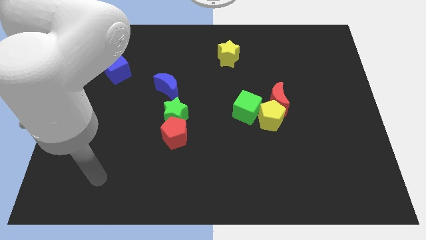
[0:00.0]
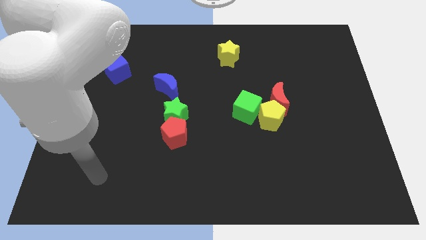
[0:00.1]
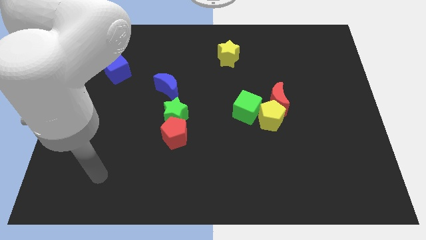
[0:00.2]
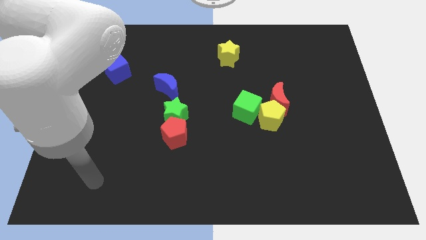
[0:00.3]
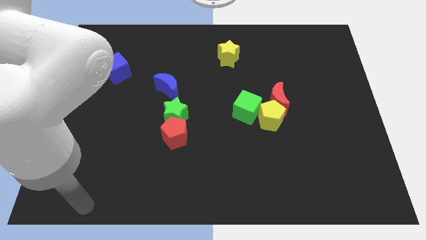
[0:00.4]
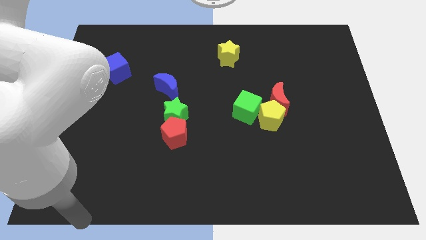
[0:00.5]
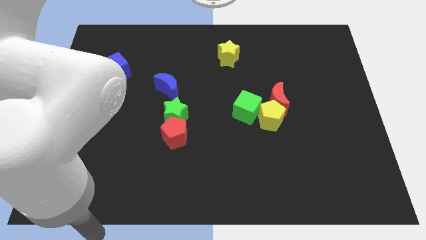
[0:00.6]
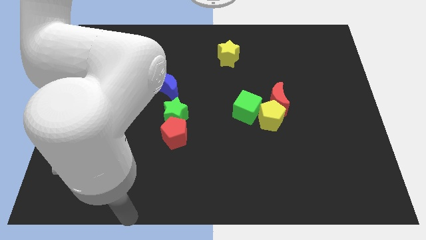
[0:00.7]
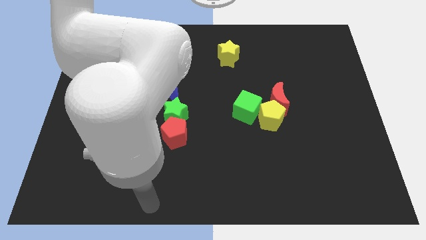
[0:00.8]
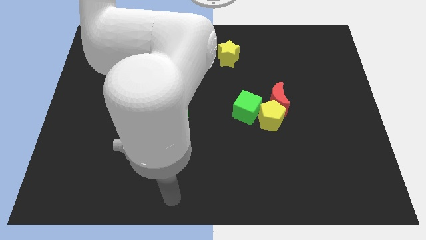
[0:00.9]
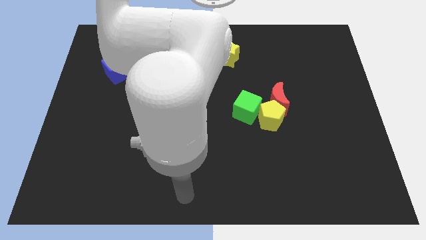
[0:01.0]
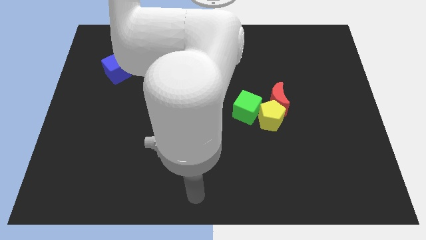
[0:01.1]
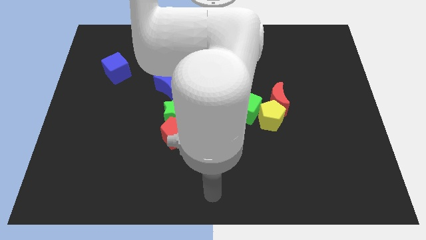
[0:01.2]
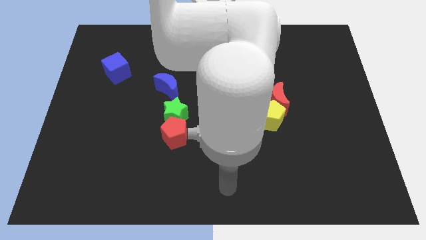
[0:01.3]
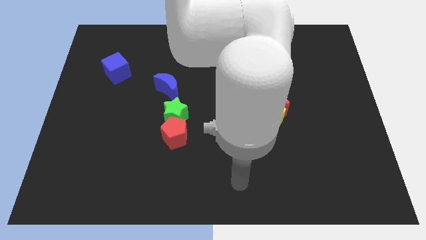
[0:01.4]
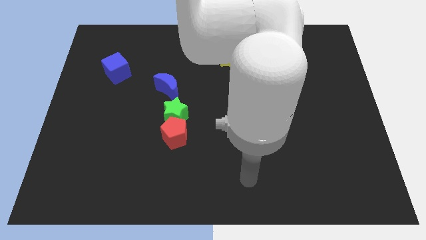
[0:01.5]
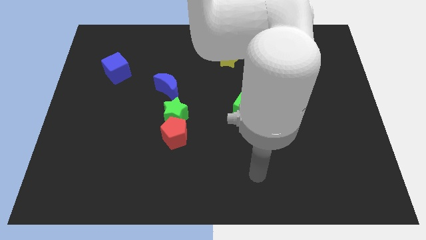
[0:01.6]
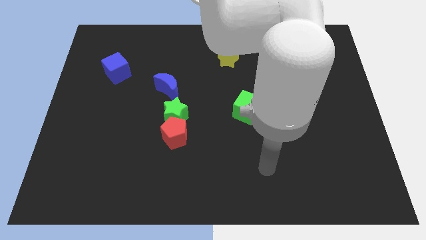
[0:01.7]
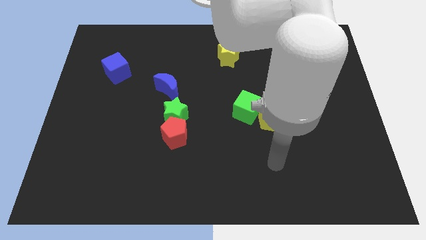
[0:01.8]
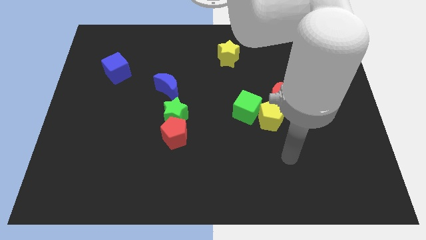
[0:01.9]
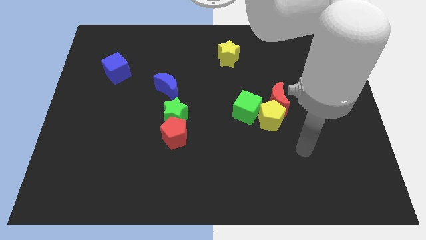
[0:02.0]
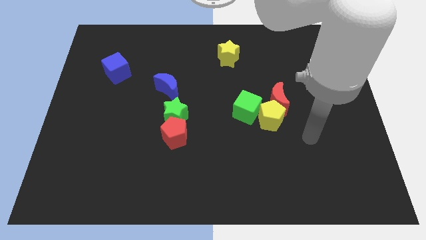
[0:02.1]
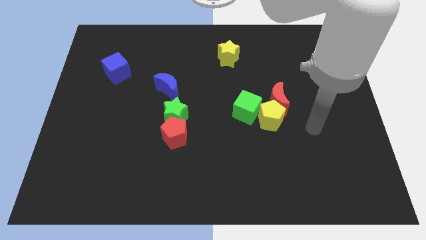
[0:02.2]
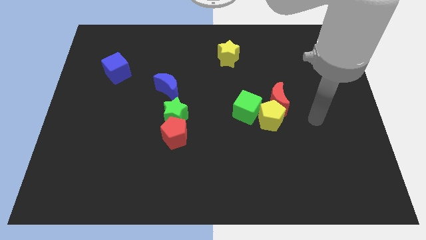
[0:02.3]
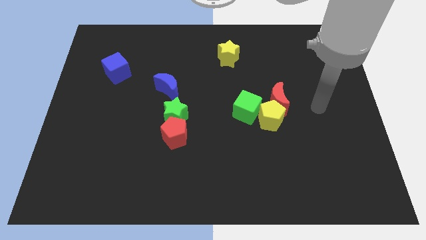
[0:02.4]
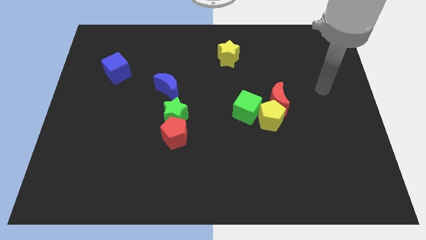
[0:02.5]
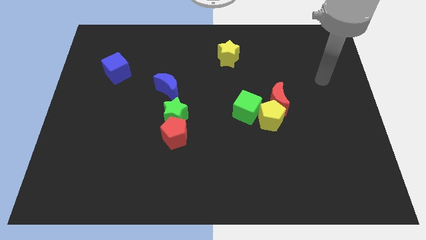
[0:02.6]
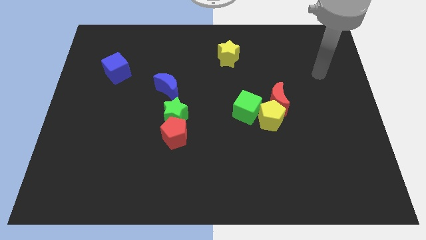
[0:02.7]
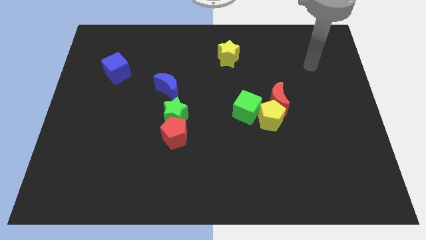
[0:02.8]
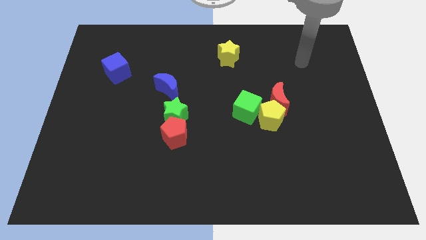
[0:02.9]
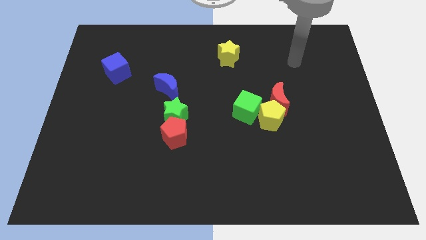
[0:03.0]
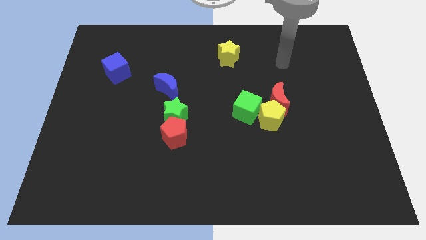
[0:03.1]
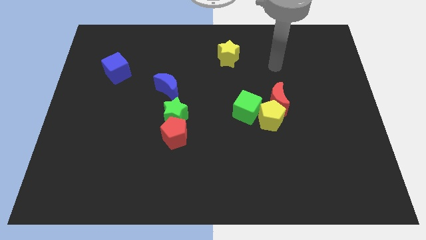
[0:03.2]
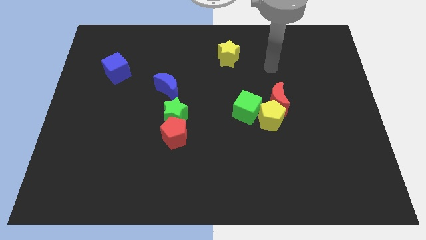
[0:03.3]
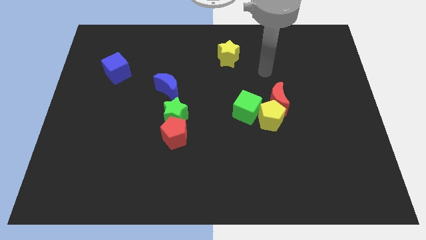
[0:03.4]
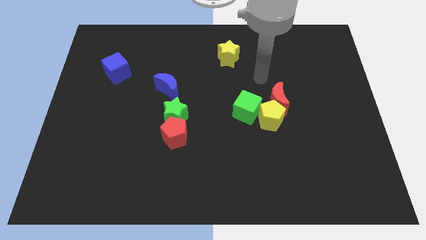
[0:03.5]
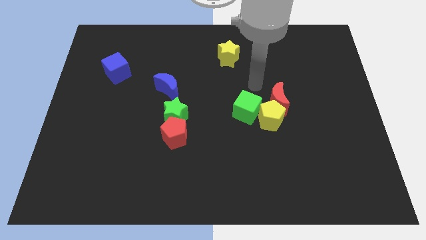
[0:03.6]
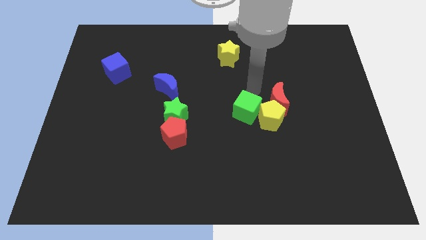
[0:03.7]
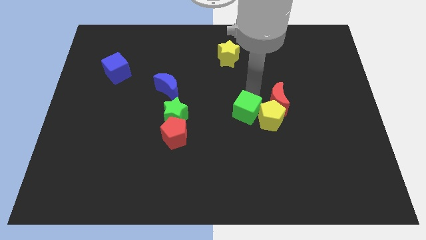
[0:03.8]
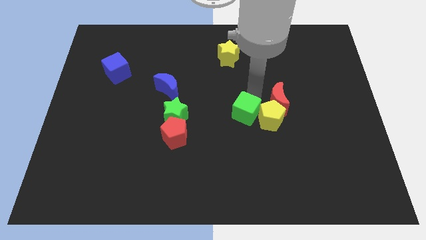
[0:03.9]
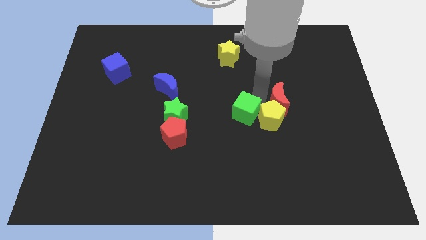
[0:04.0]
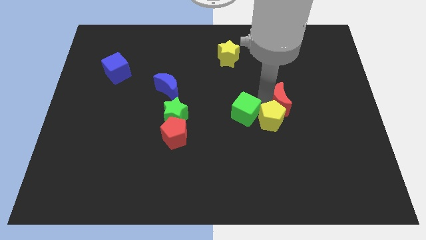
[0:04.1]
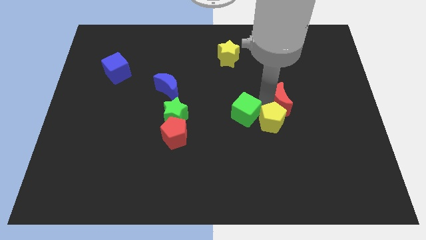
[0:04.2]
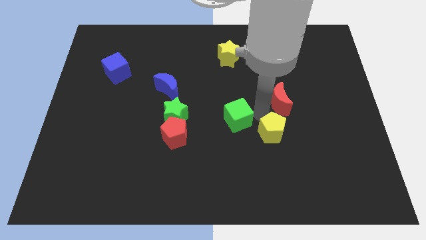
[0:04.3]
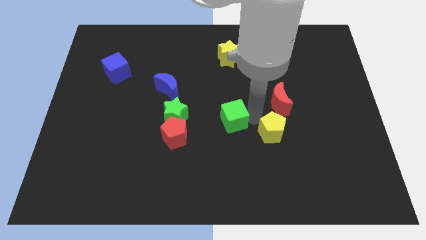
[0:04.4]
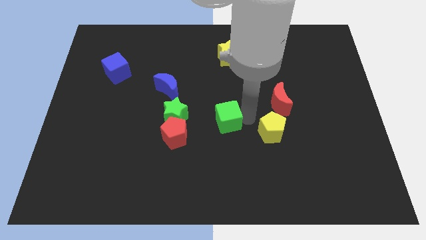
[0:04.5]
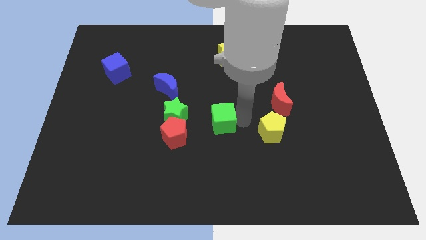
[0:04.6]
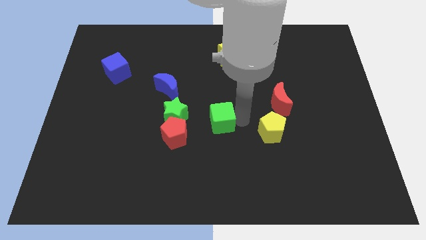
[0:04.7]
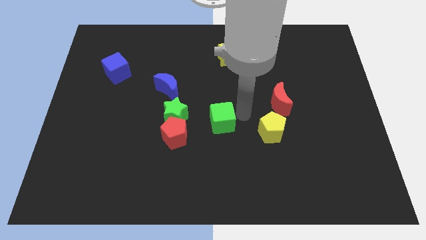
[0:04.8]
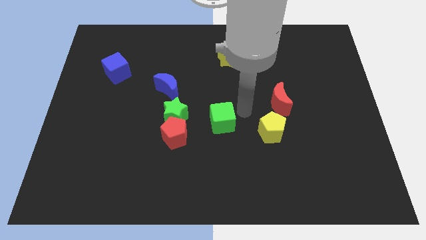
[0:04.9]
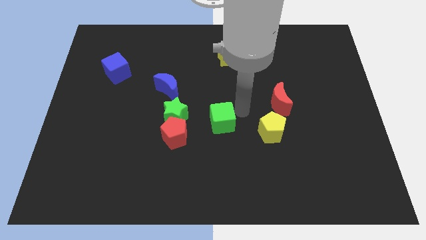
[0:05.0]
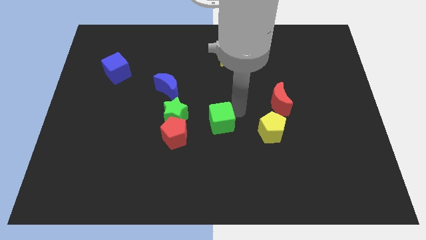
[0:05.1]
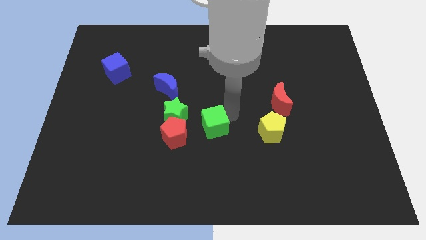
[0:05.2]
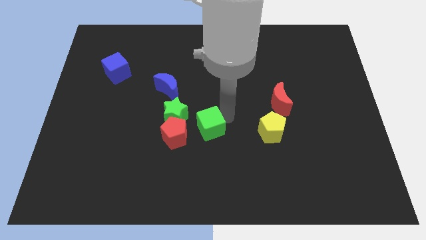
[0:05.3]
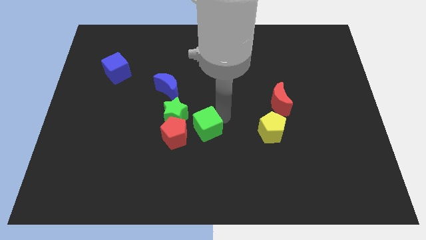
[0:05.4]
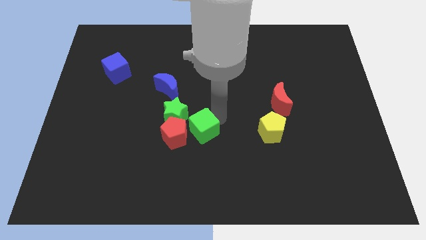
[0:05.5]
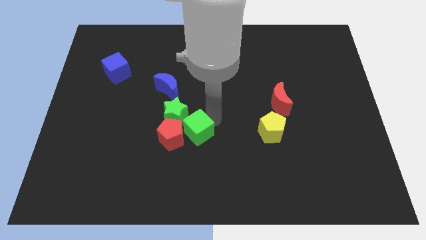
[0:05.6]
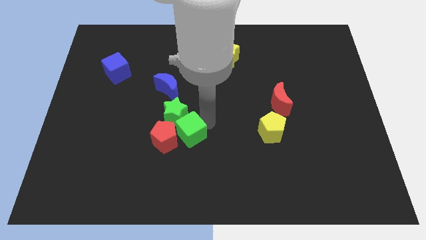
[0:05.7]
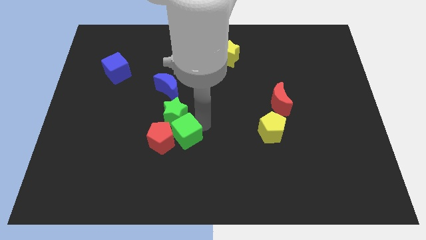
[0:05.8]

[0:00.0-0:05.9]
move the green cube close to the red pentagon

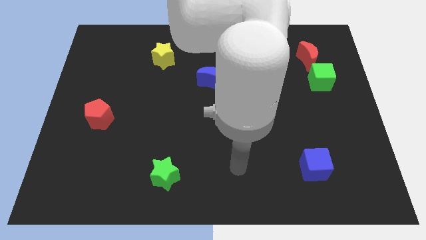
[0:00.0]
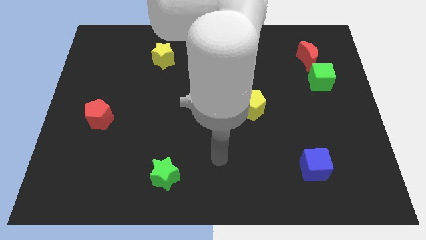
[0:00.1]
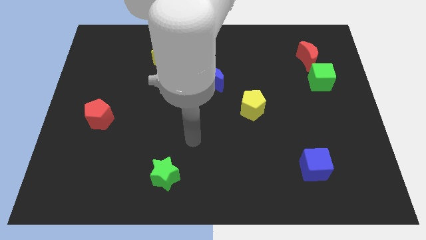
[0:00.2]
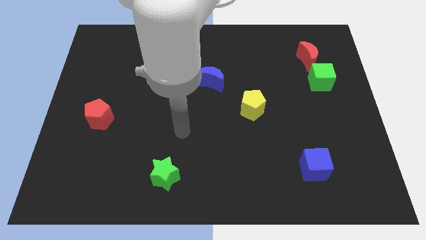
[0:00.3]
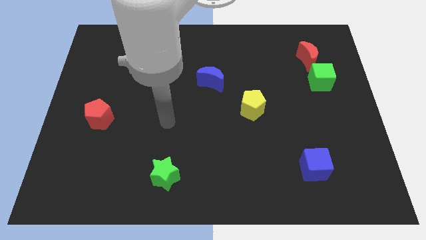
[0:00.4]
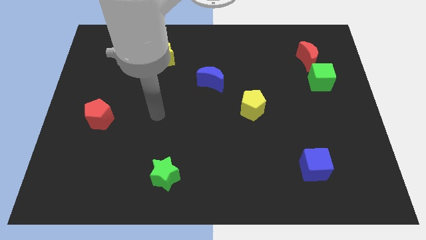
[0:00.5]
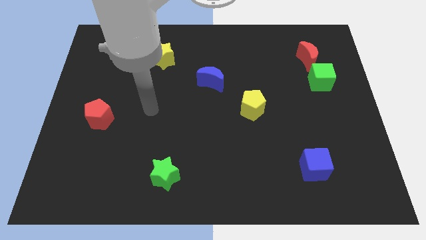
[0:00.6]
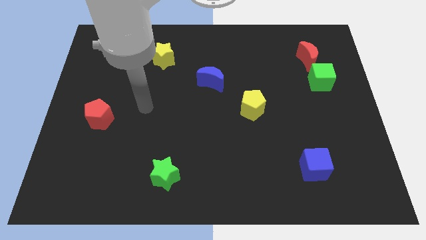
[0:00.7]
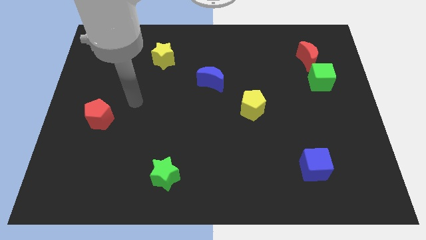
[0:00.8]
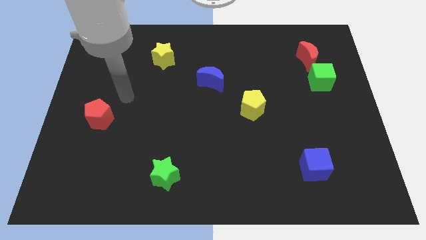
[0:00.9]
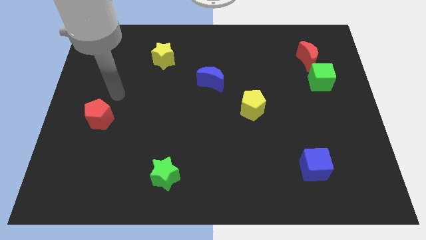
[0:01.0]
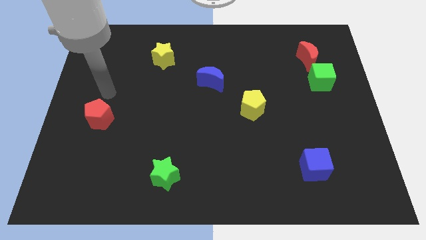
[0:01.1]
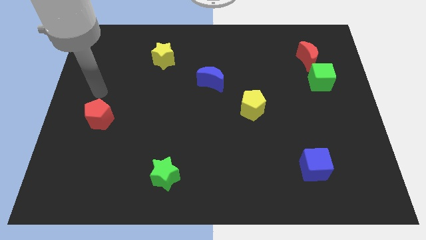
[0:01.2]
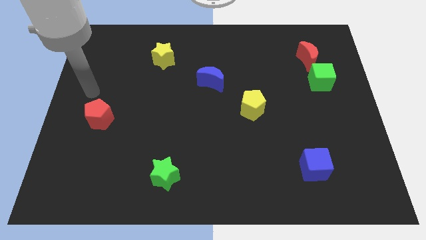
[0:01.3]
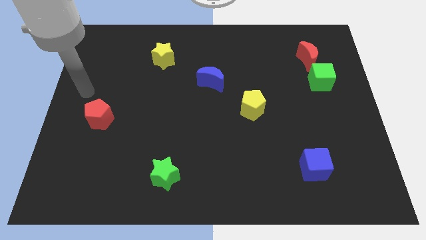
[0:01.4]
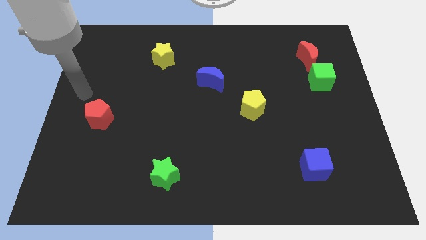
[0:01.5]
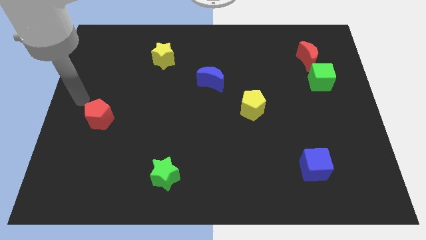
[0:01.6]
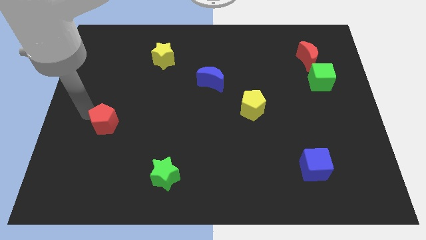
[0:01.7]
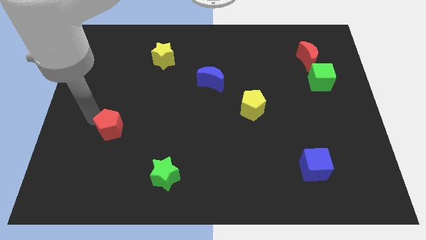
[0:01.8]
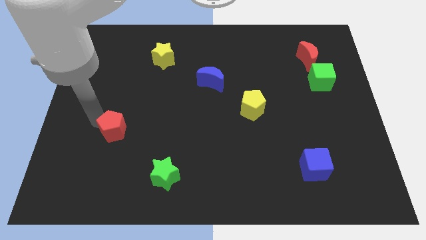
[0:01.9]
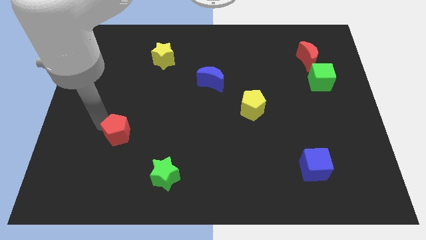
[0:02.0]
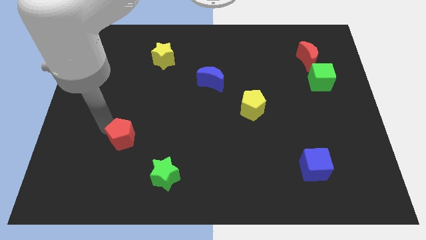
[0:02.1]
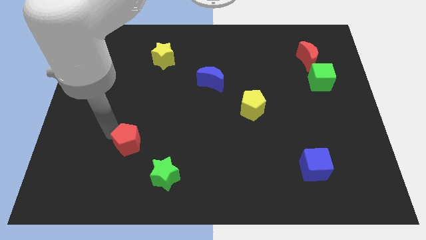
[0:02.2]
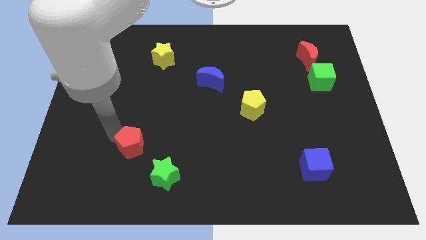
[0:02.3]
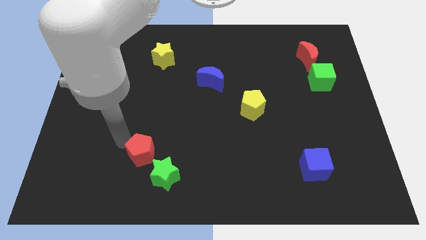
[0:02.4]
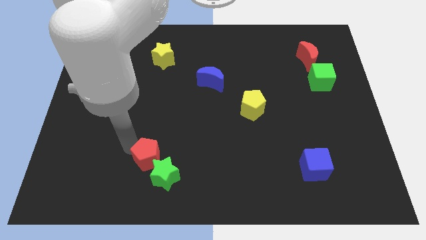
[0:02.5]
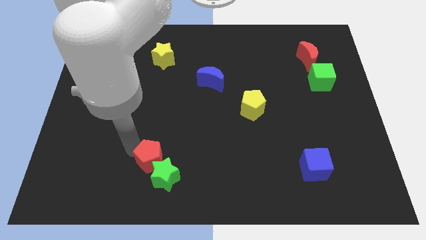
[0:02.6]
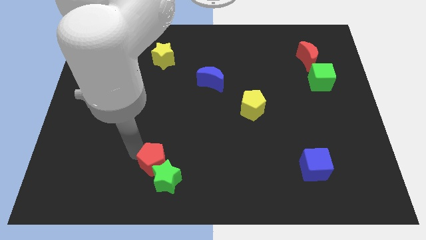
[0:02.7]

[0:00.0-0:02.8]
put the red pentagon close to the green star
